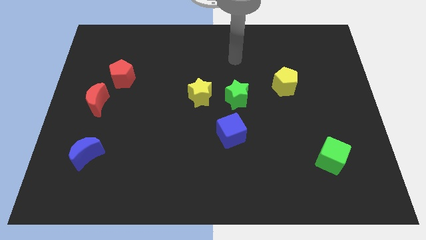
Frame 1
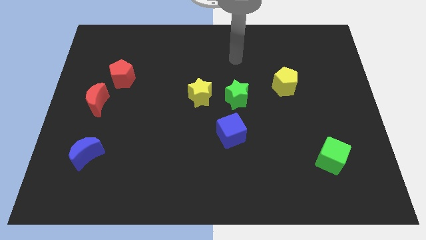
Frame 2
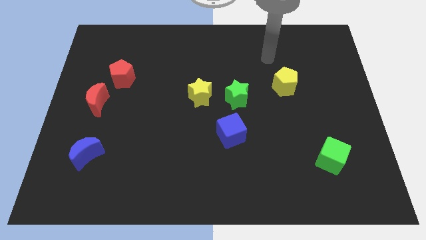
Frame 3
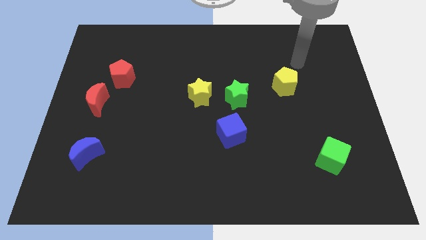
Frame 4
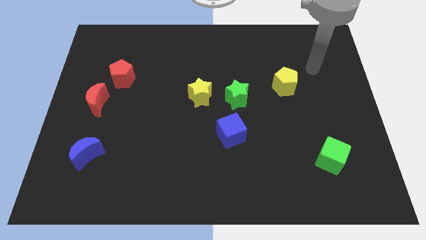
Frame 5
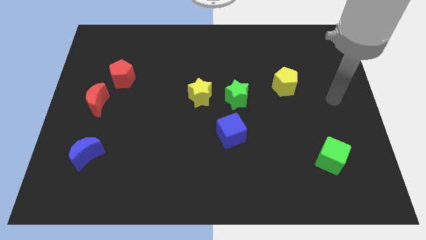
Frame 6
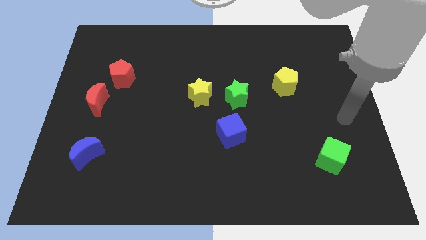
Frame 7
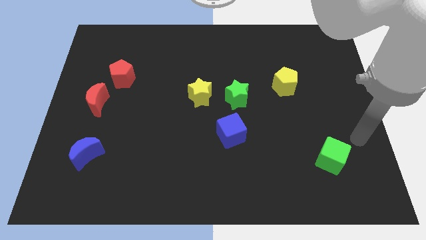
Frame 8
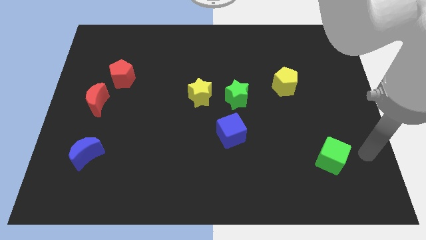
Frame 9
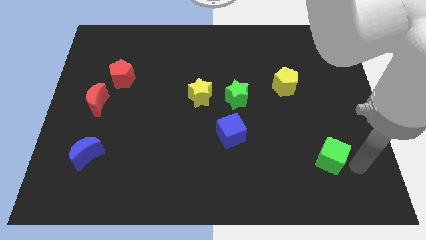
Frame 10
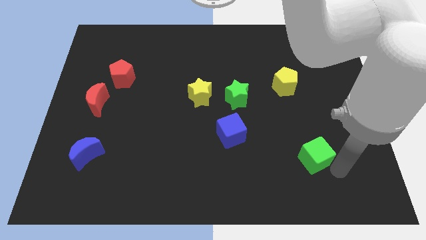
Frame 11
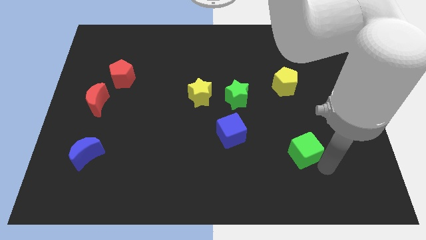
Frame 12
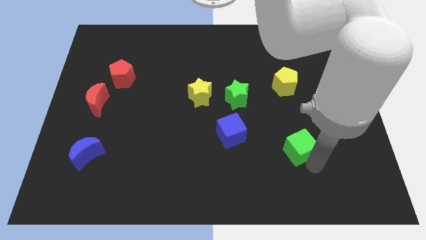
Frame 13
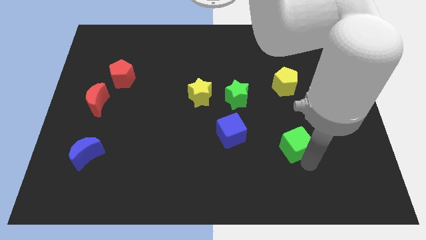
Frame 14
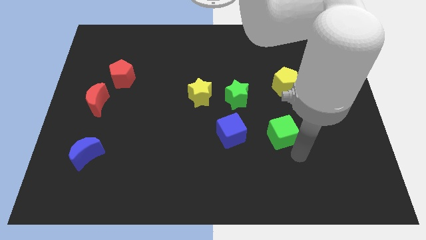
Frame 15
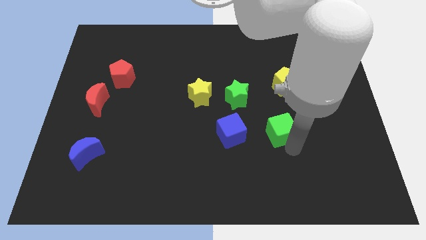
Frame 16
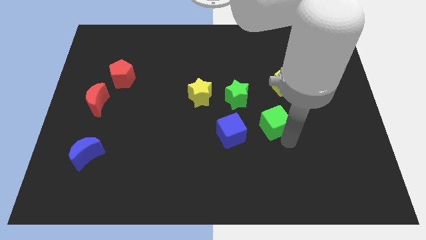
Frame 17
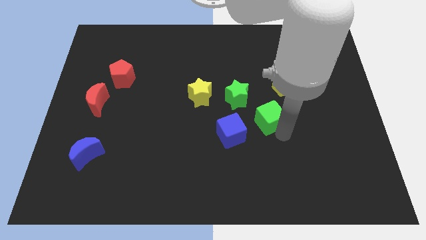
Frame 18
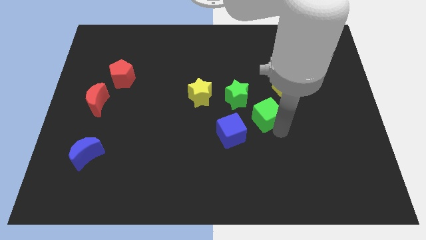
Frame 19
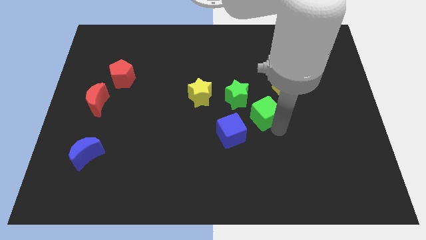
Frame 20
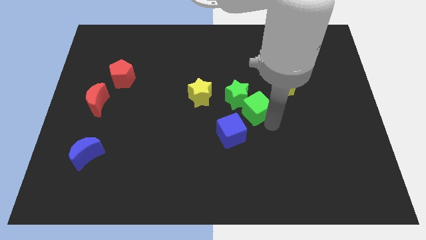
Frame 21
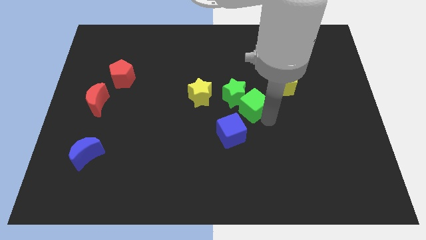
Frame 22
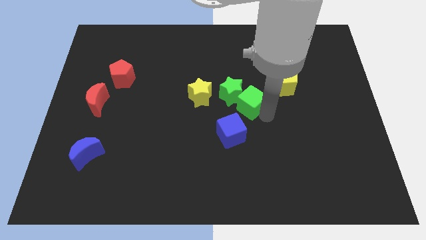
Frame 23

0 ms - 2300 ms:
slide the green cube to the green star

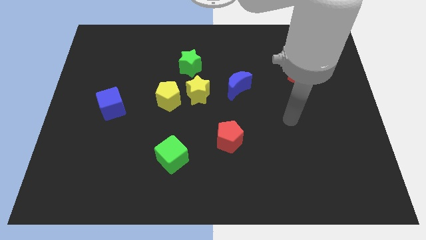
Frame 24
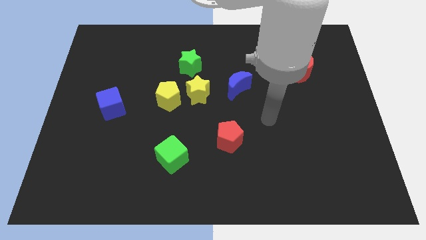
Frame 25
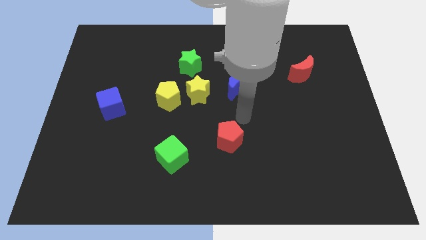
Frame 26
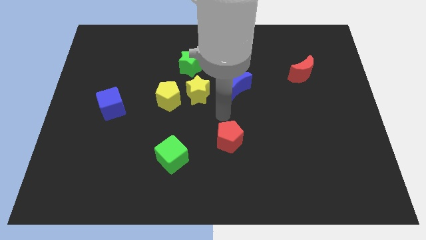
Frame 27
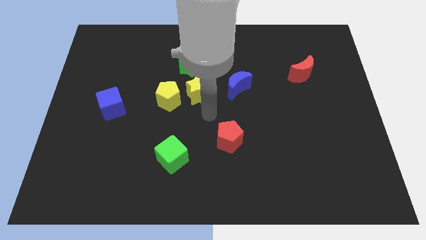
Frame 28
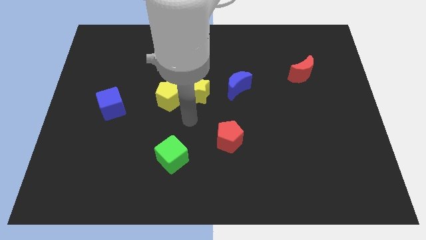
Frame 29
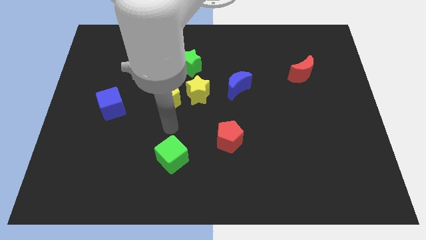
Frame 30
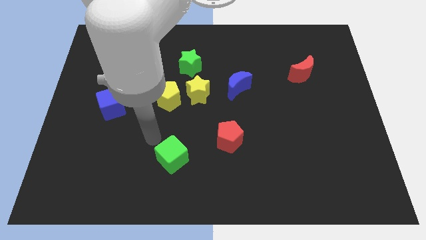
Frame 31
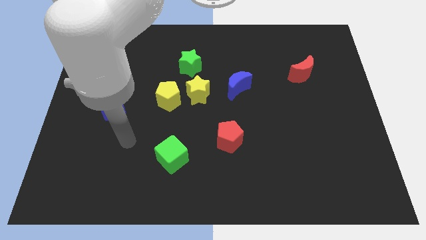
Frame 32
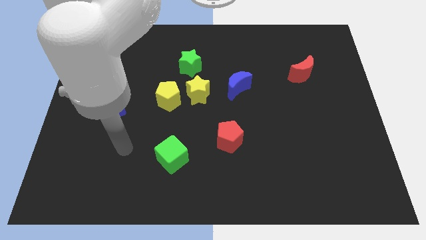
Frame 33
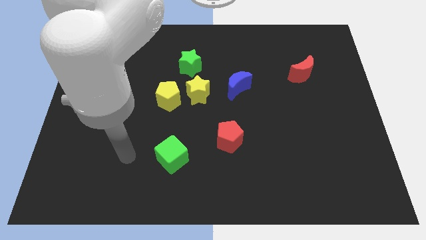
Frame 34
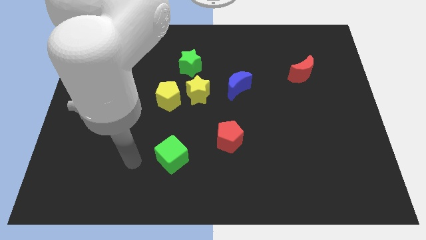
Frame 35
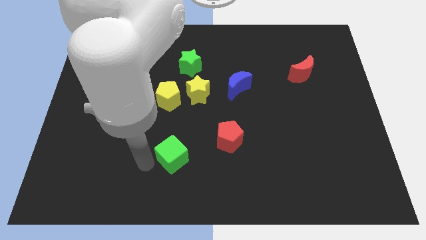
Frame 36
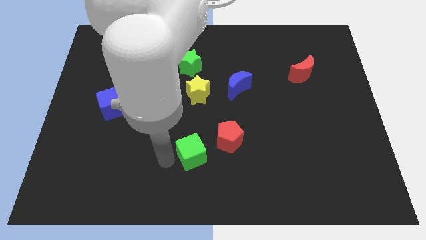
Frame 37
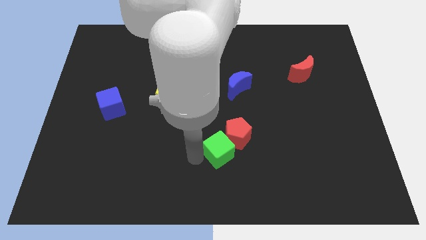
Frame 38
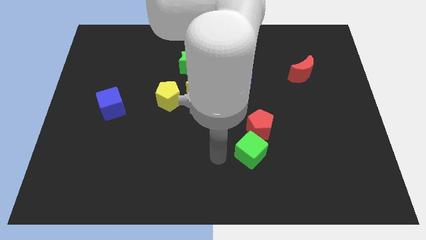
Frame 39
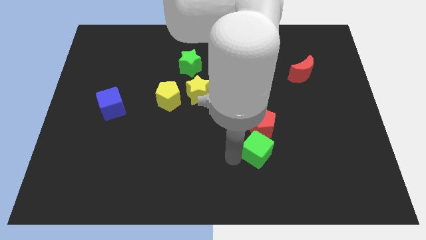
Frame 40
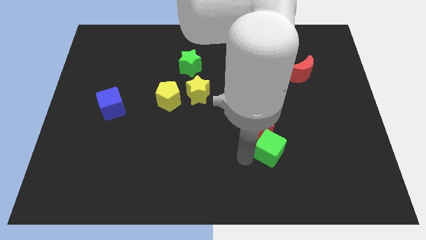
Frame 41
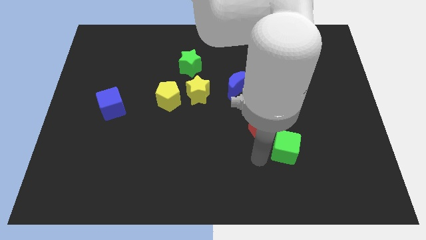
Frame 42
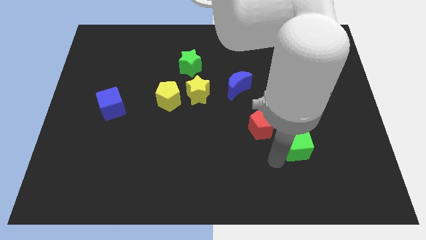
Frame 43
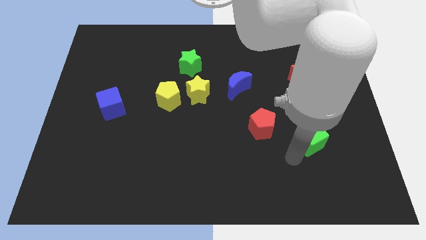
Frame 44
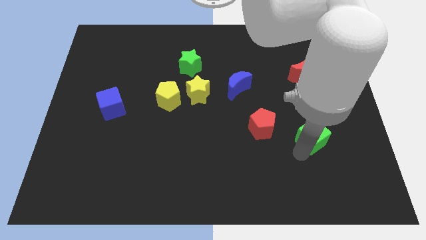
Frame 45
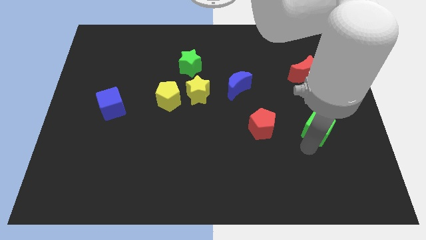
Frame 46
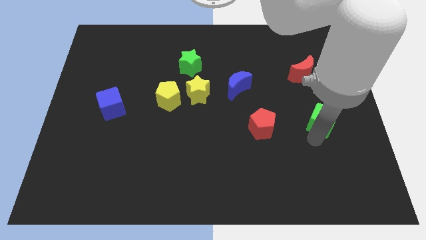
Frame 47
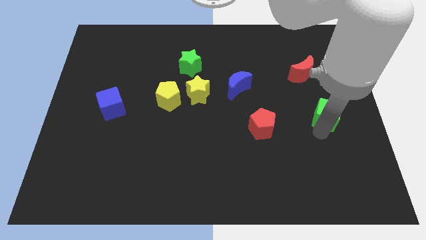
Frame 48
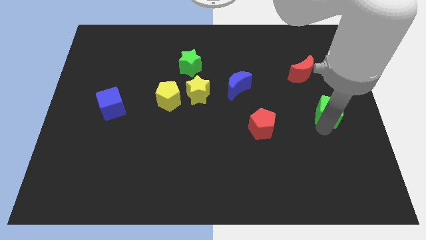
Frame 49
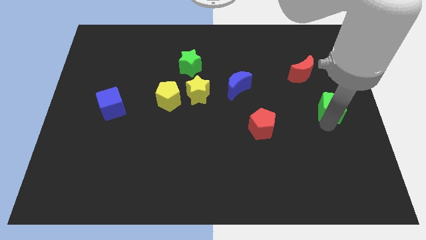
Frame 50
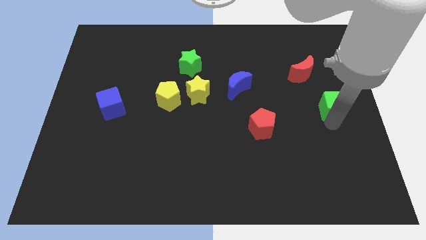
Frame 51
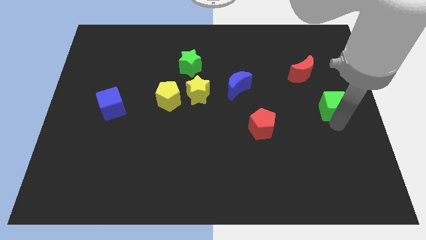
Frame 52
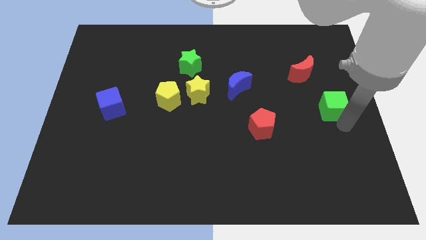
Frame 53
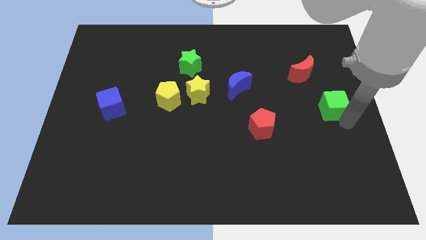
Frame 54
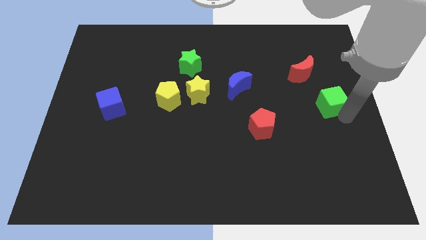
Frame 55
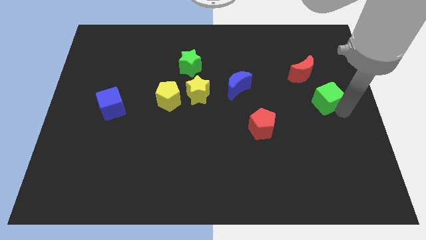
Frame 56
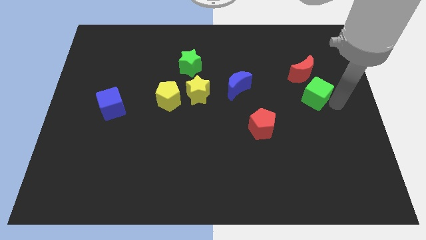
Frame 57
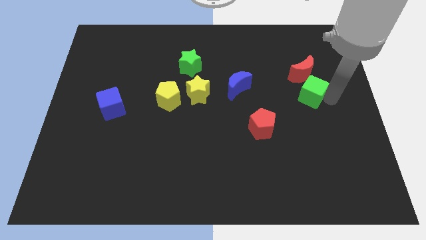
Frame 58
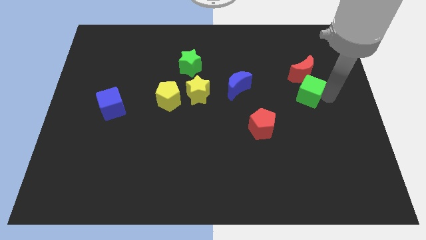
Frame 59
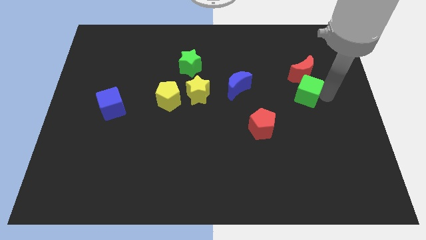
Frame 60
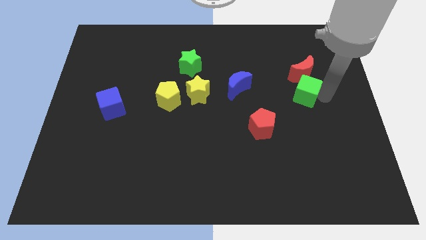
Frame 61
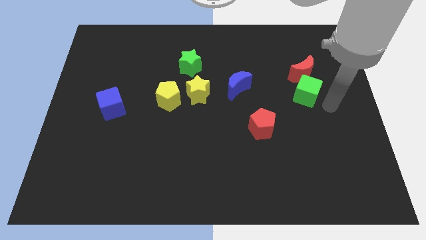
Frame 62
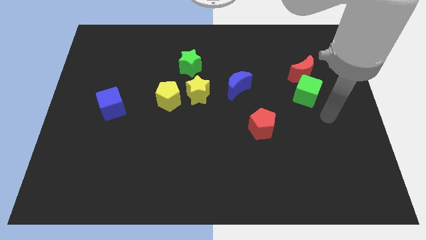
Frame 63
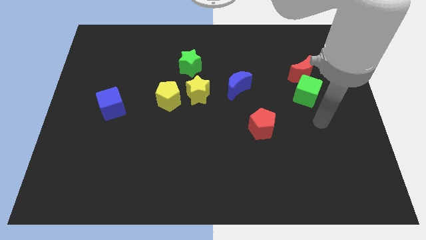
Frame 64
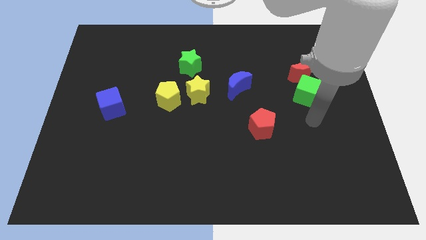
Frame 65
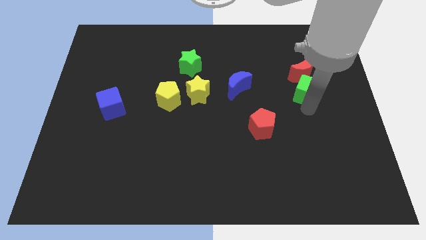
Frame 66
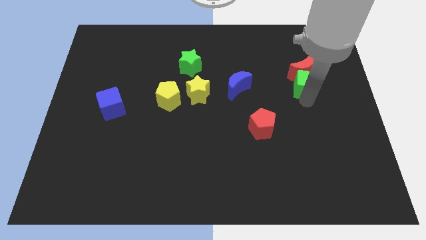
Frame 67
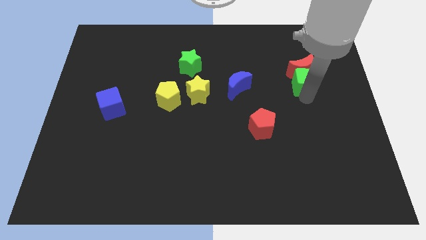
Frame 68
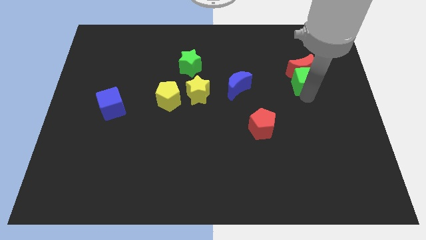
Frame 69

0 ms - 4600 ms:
put the green cube towards the red moon

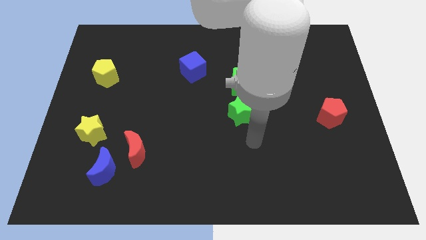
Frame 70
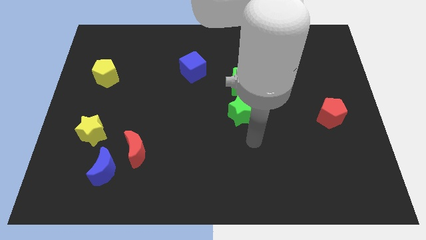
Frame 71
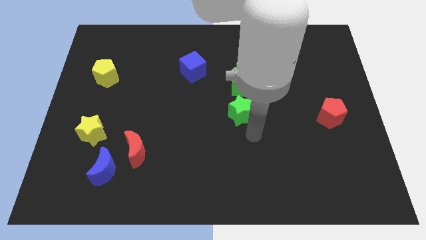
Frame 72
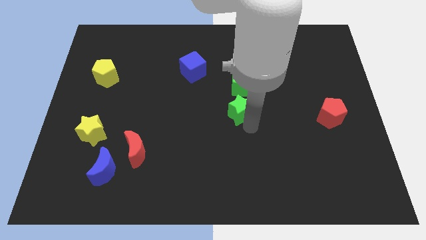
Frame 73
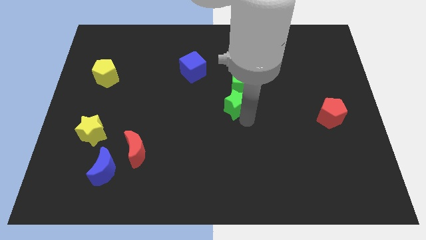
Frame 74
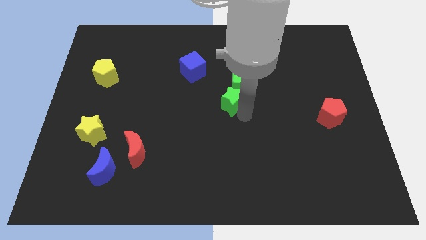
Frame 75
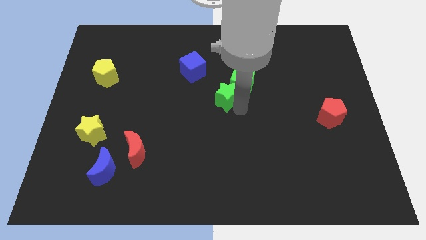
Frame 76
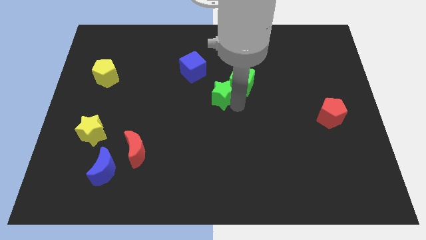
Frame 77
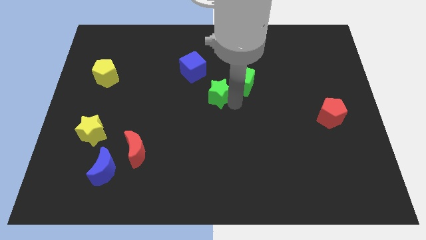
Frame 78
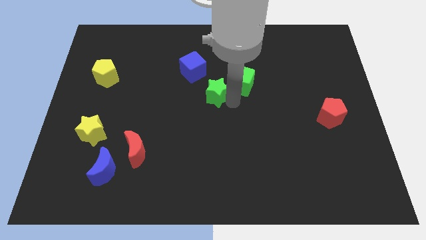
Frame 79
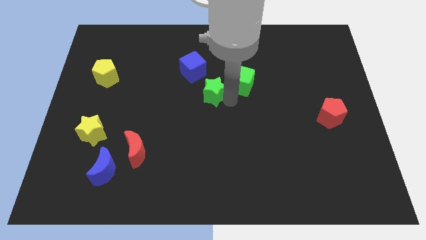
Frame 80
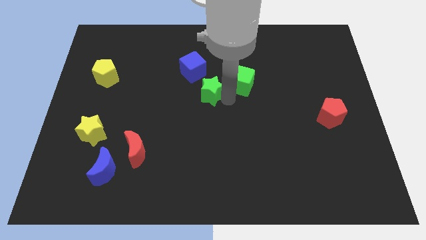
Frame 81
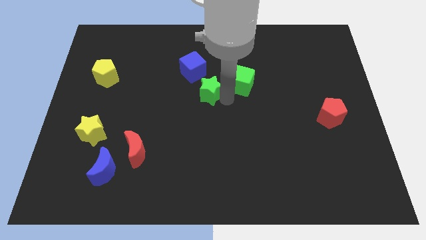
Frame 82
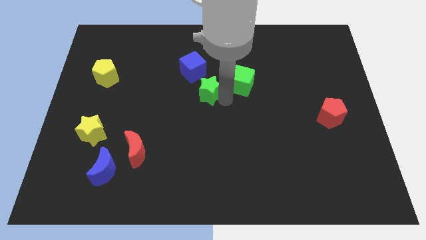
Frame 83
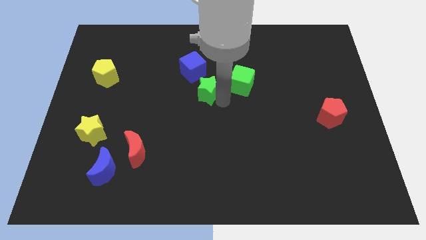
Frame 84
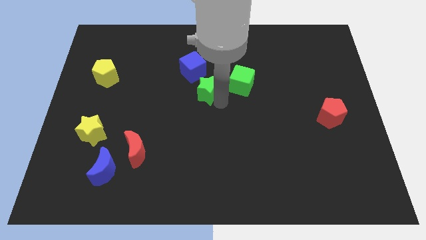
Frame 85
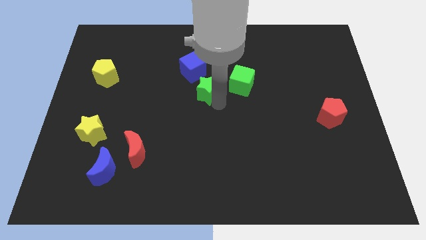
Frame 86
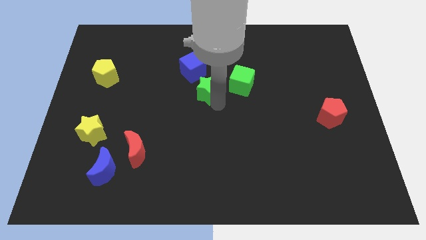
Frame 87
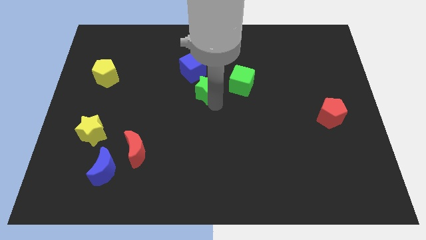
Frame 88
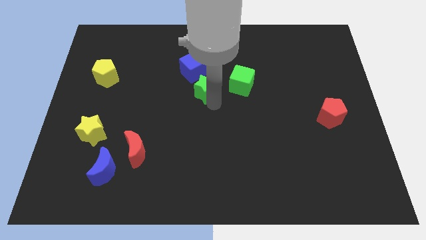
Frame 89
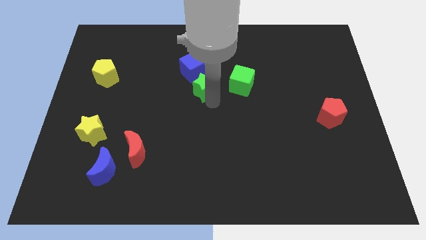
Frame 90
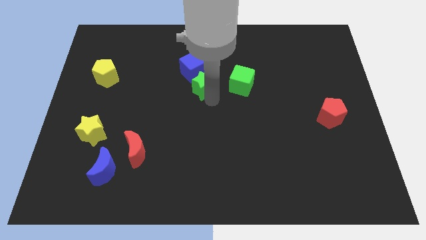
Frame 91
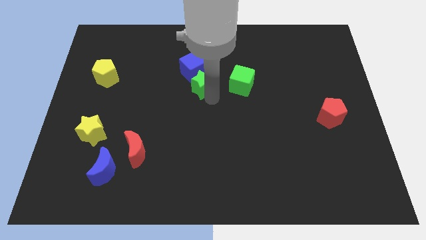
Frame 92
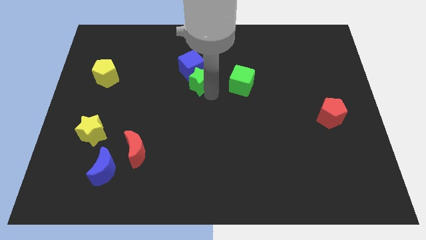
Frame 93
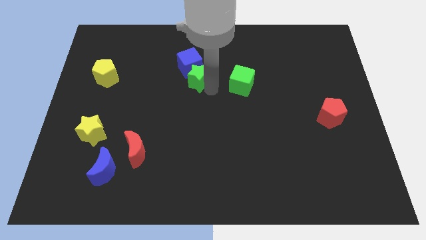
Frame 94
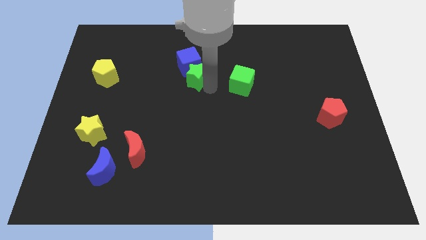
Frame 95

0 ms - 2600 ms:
push the green star close to the blue cube
